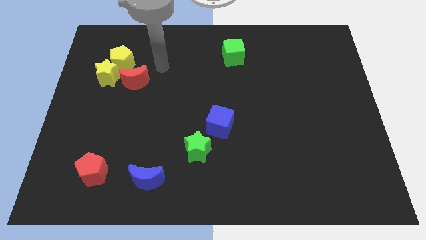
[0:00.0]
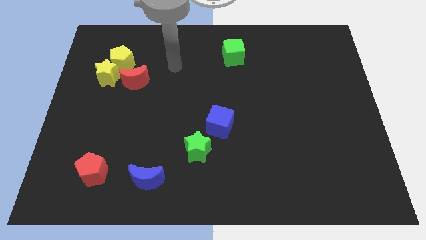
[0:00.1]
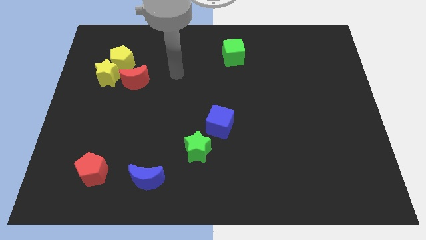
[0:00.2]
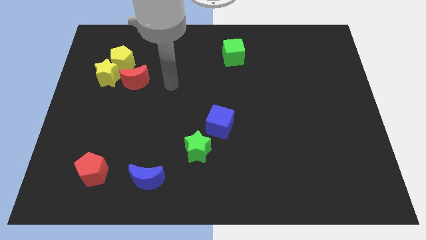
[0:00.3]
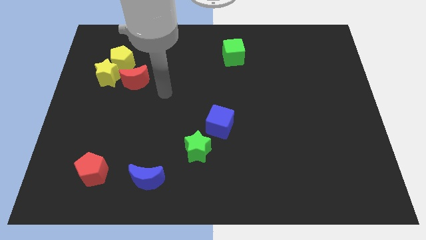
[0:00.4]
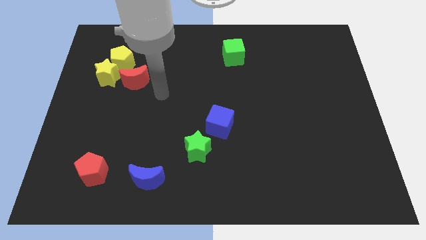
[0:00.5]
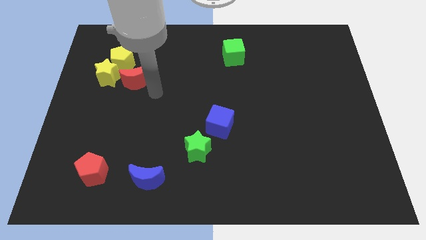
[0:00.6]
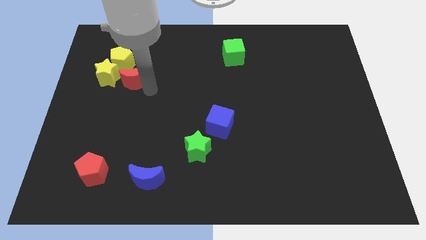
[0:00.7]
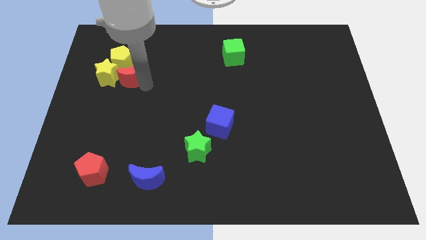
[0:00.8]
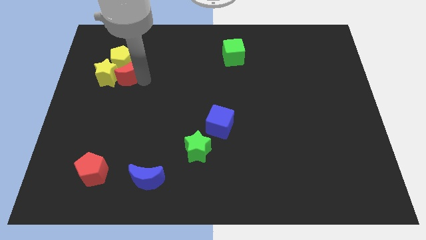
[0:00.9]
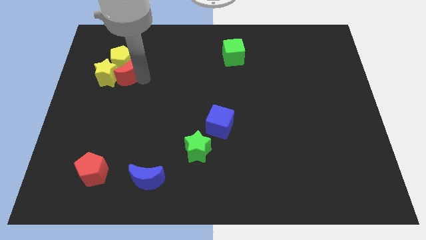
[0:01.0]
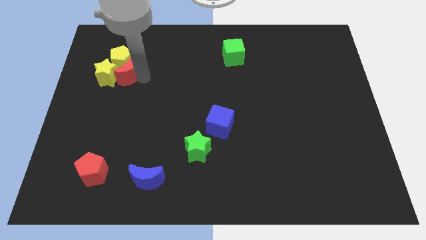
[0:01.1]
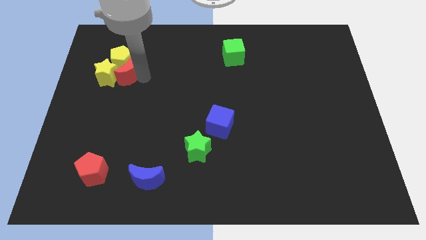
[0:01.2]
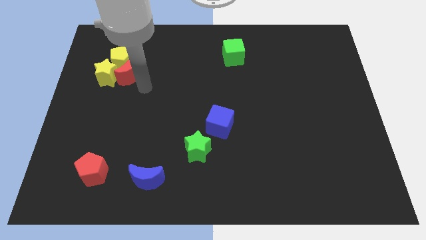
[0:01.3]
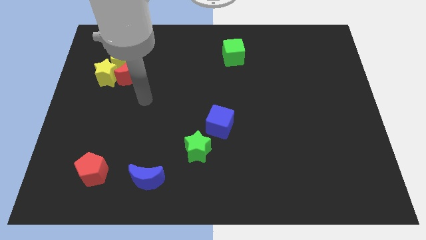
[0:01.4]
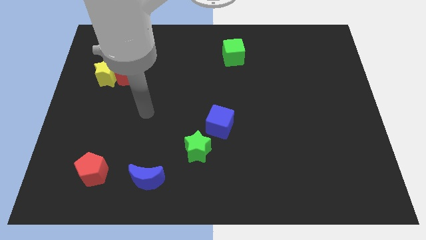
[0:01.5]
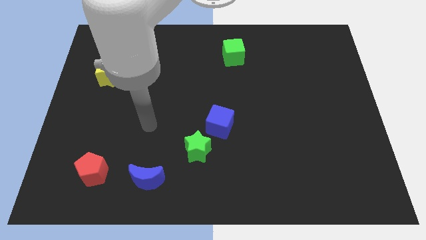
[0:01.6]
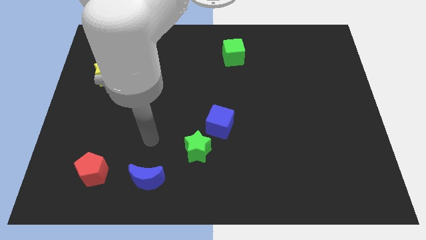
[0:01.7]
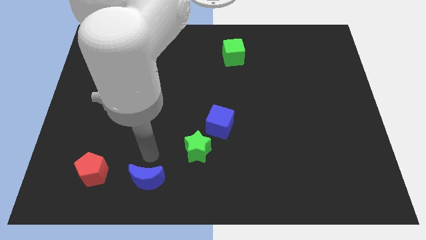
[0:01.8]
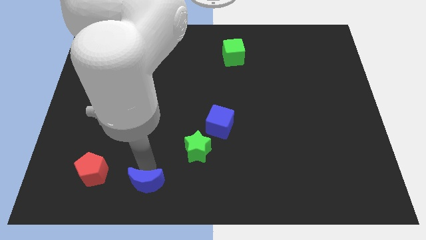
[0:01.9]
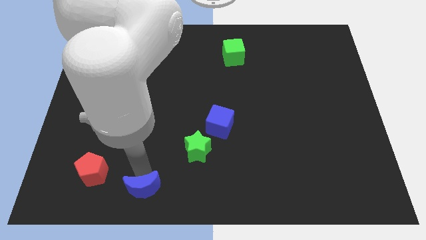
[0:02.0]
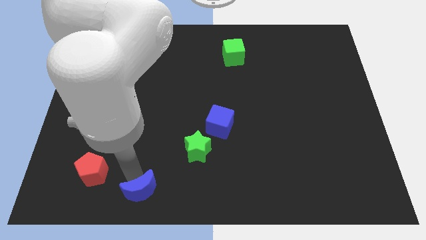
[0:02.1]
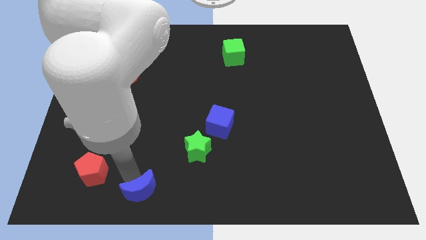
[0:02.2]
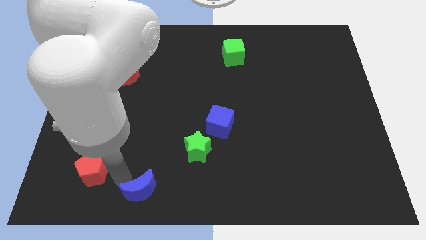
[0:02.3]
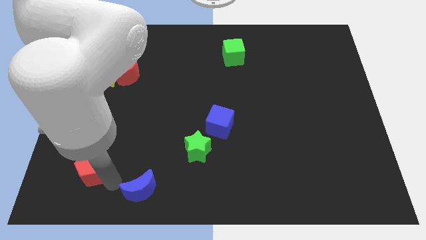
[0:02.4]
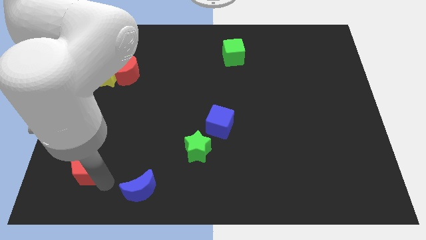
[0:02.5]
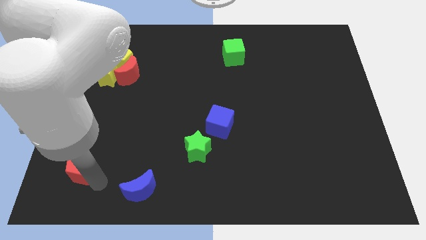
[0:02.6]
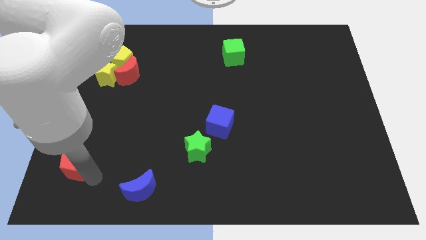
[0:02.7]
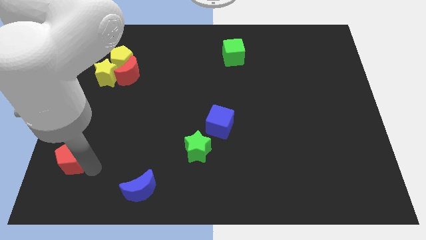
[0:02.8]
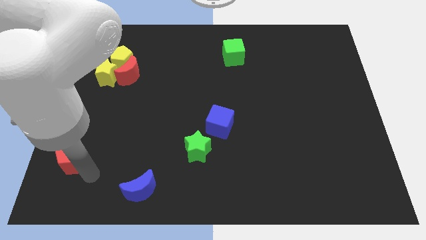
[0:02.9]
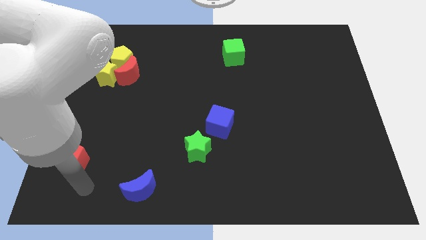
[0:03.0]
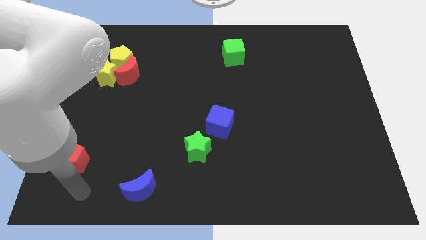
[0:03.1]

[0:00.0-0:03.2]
adjust the red pentagon and blue moon diagonally

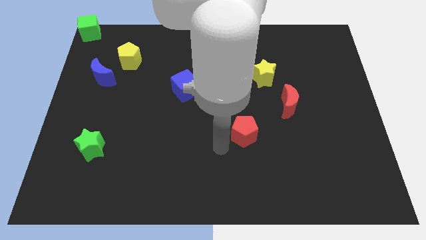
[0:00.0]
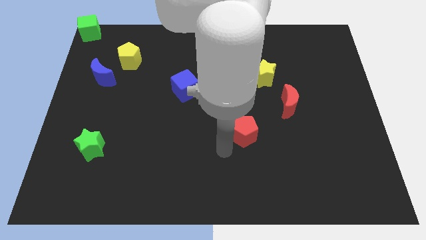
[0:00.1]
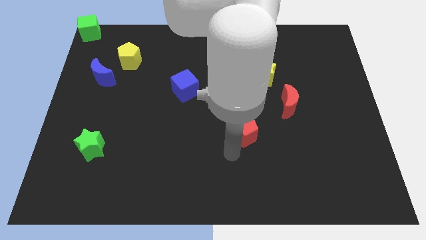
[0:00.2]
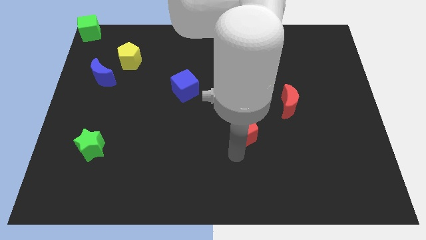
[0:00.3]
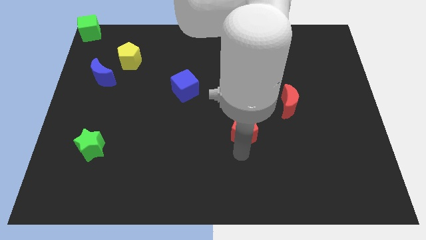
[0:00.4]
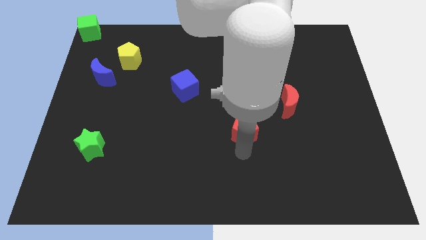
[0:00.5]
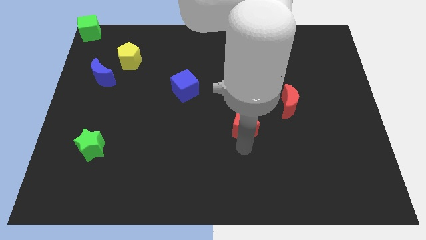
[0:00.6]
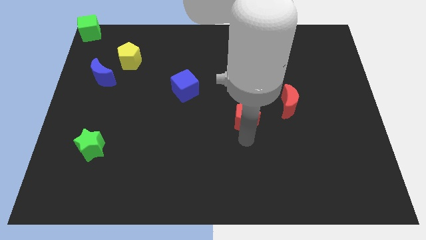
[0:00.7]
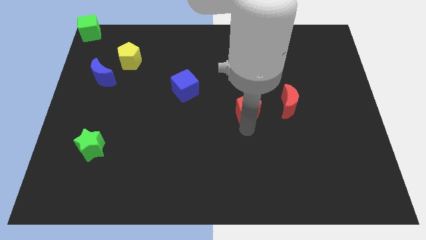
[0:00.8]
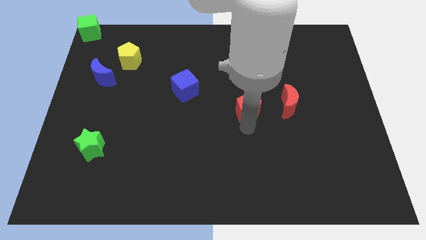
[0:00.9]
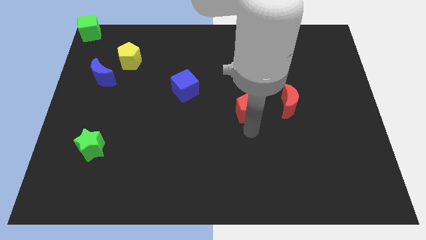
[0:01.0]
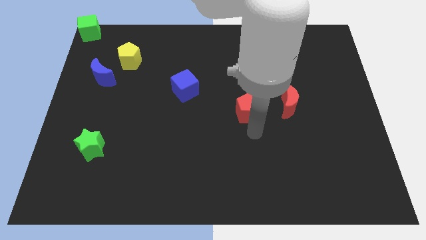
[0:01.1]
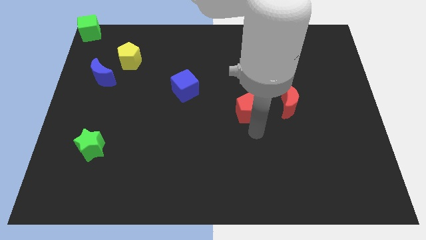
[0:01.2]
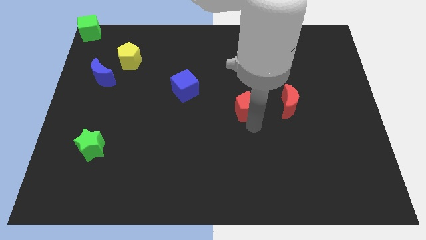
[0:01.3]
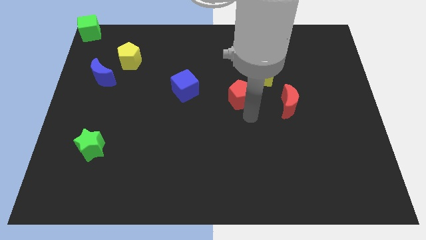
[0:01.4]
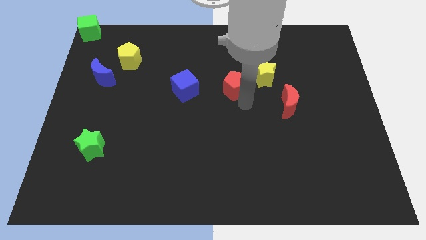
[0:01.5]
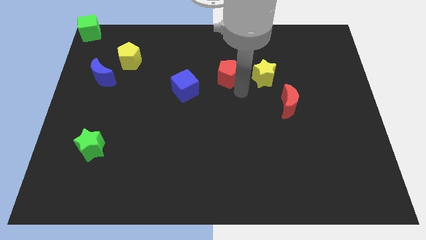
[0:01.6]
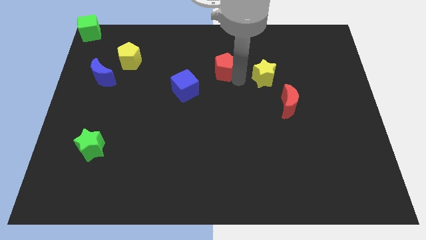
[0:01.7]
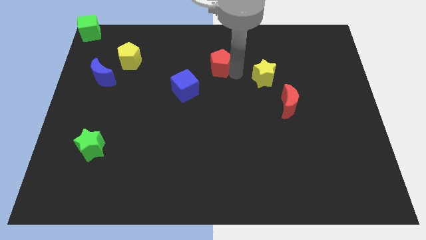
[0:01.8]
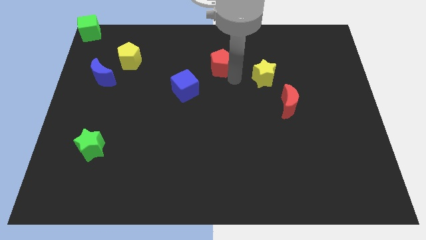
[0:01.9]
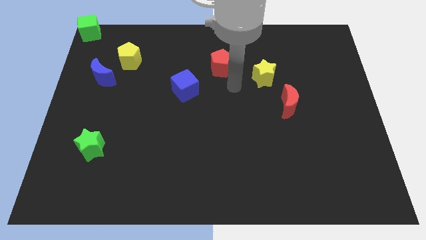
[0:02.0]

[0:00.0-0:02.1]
push the red pentagon towards top

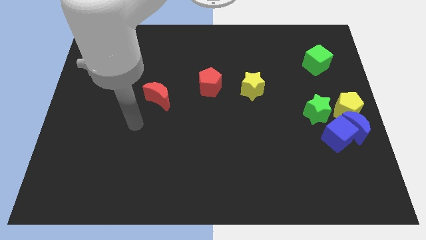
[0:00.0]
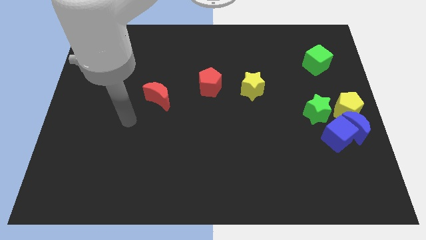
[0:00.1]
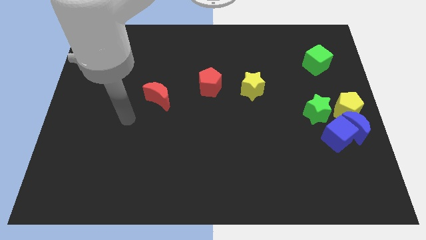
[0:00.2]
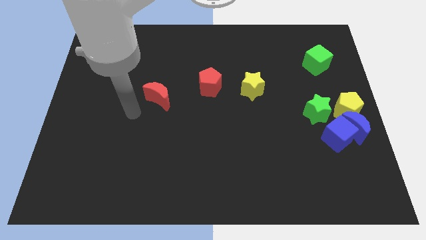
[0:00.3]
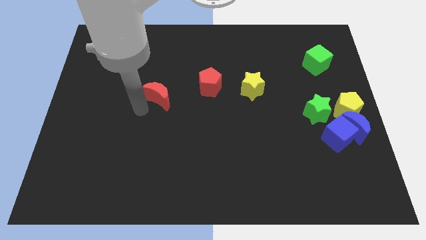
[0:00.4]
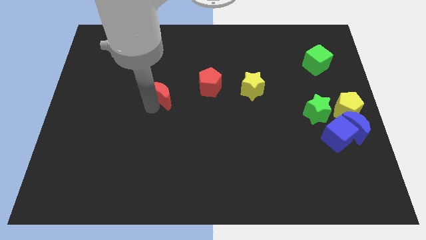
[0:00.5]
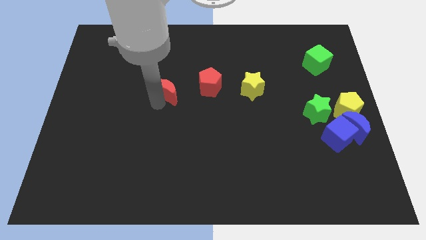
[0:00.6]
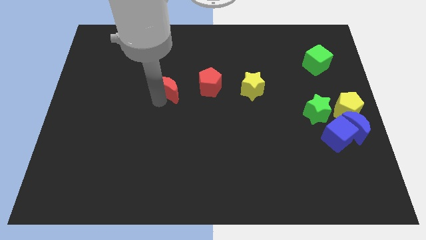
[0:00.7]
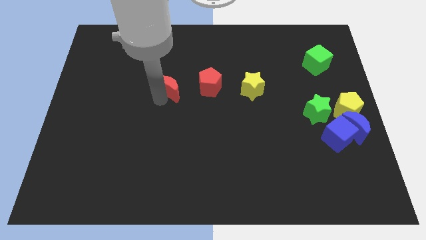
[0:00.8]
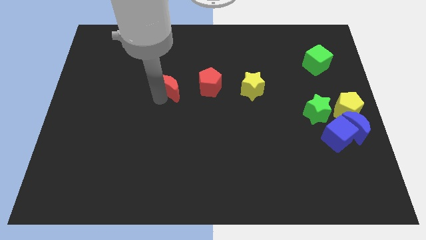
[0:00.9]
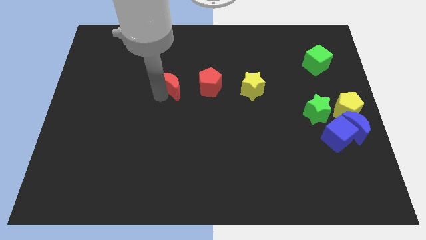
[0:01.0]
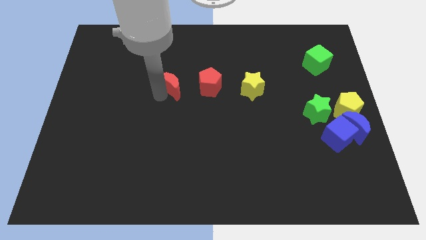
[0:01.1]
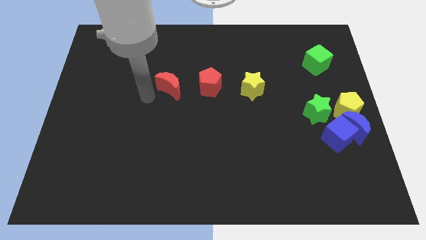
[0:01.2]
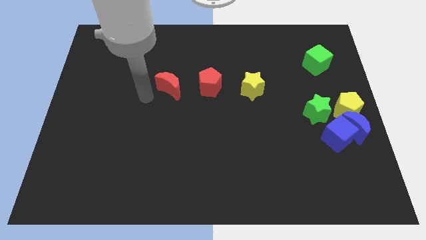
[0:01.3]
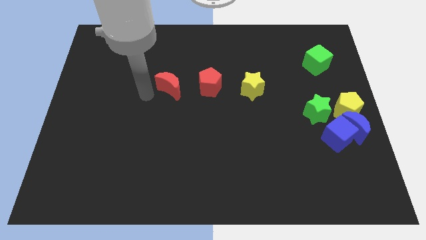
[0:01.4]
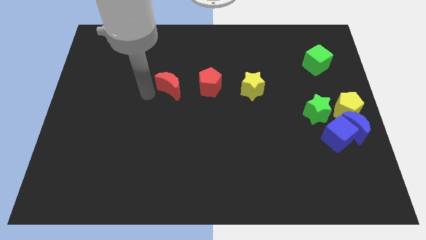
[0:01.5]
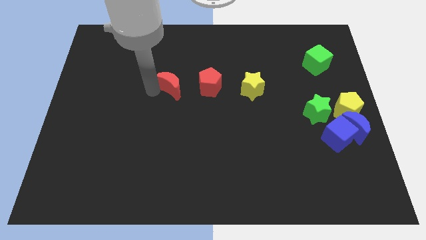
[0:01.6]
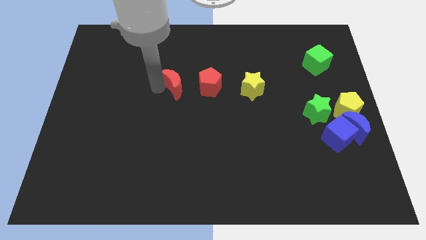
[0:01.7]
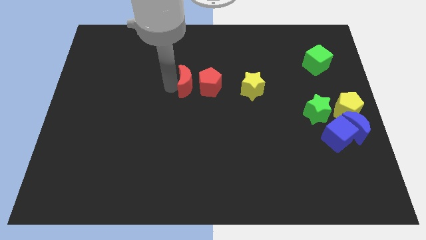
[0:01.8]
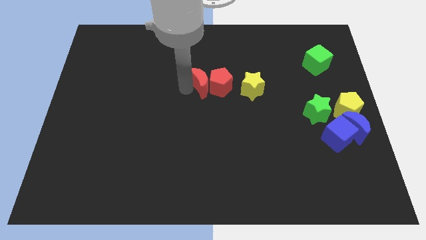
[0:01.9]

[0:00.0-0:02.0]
push the red pentagon with the red moon

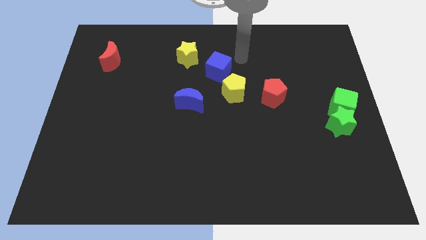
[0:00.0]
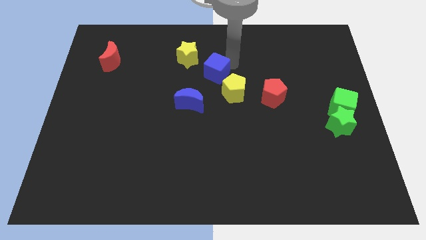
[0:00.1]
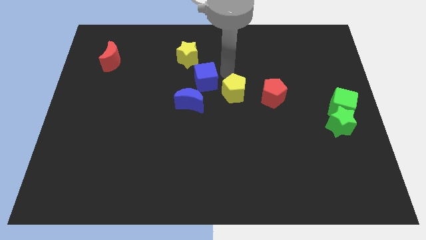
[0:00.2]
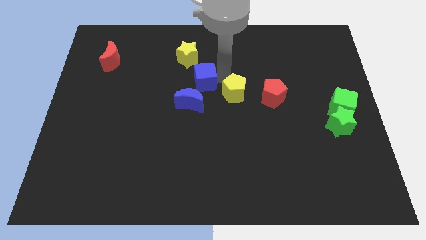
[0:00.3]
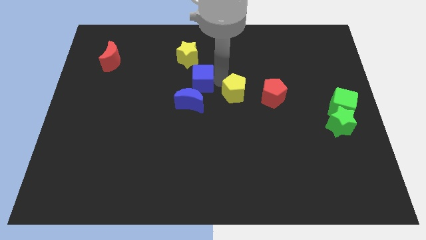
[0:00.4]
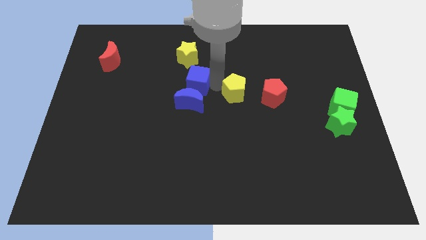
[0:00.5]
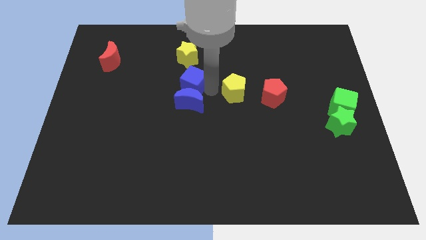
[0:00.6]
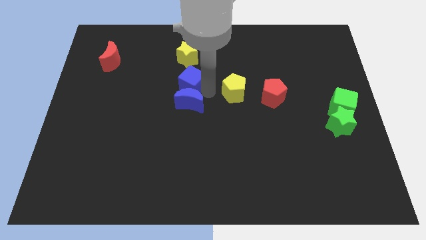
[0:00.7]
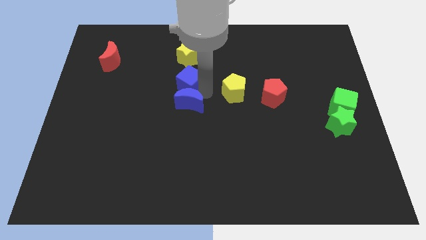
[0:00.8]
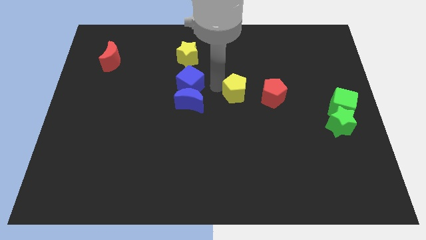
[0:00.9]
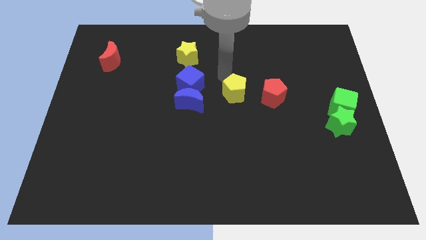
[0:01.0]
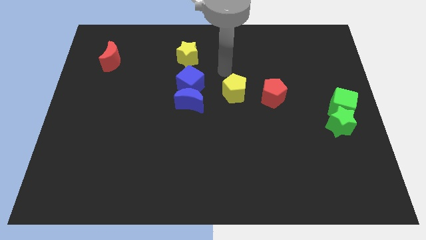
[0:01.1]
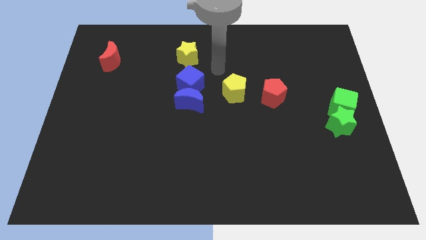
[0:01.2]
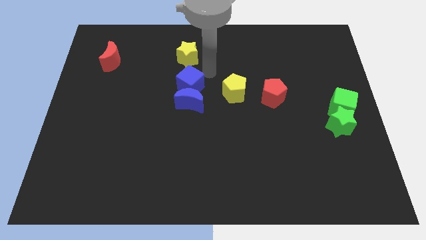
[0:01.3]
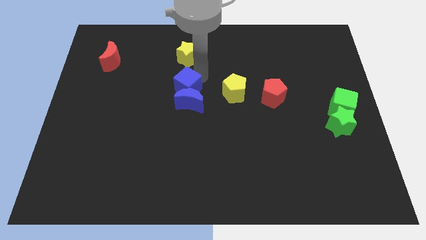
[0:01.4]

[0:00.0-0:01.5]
put the blue cube in between the yellow star and blue moon

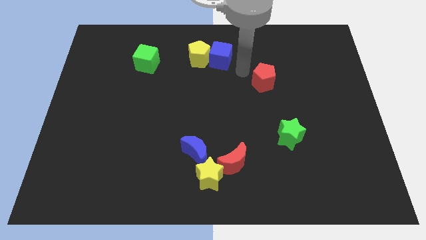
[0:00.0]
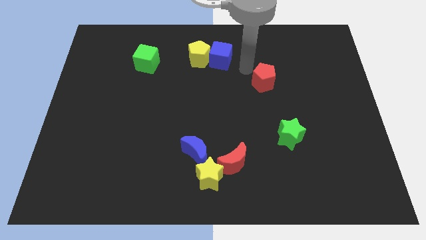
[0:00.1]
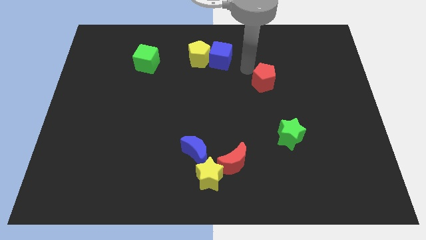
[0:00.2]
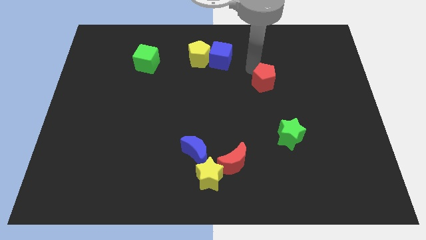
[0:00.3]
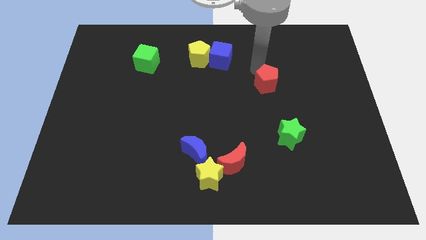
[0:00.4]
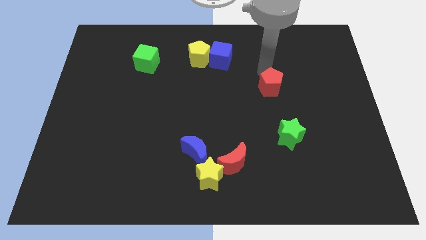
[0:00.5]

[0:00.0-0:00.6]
place arm above red pentagon
